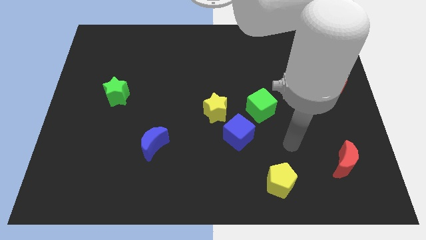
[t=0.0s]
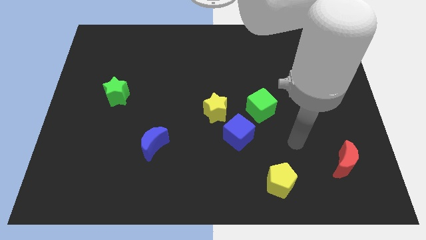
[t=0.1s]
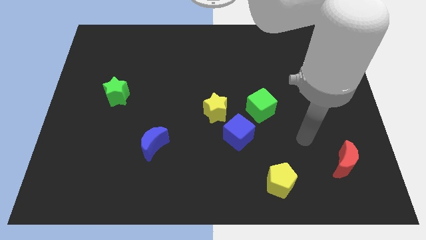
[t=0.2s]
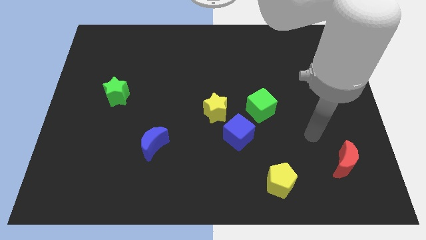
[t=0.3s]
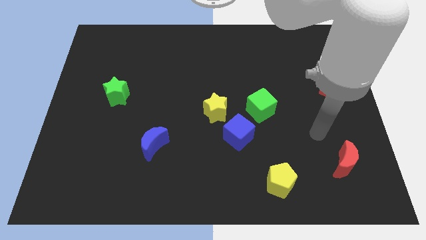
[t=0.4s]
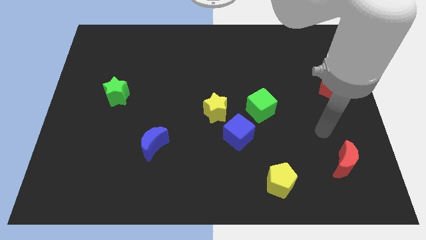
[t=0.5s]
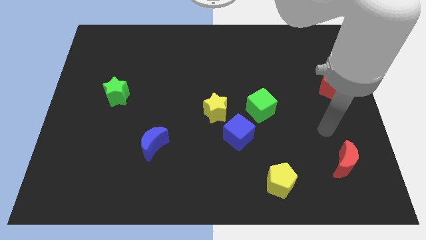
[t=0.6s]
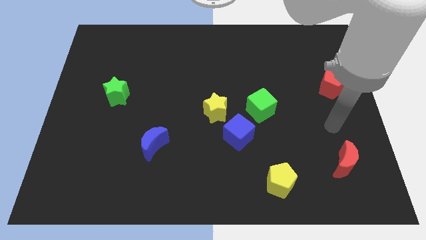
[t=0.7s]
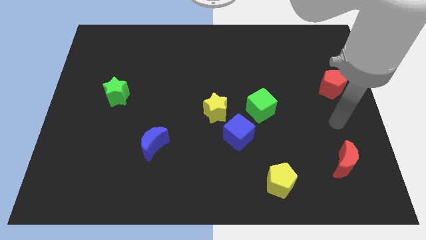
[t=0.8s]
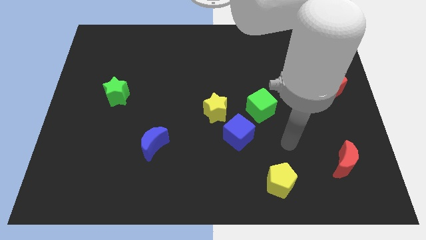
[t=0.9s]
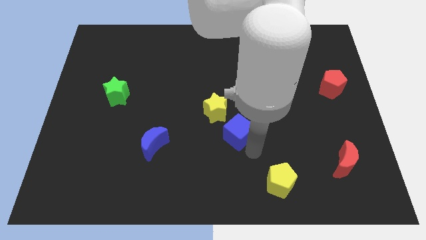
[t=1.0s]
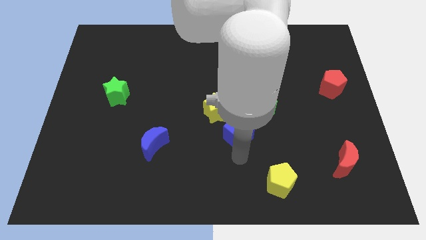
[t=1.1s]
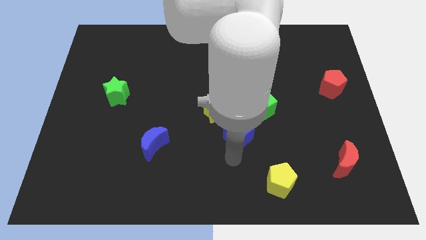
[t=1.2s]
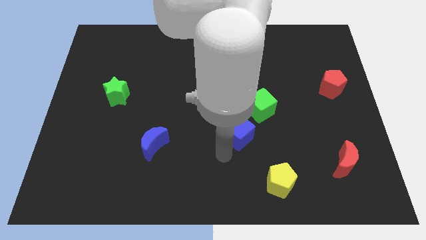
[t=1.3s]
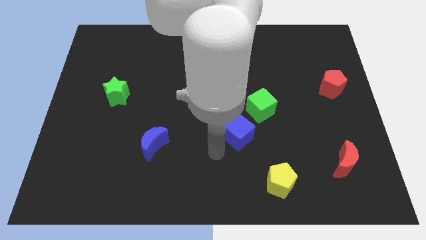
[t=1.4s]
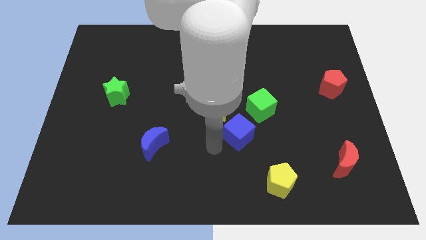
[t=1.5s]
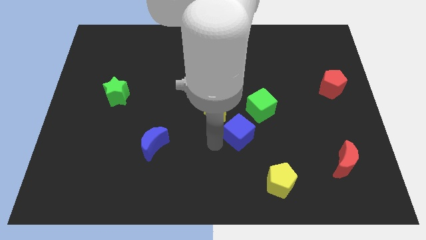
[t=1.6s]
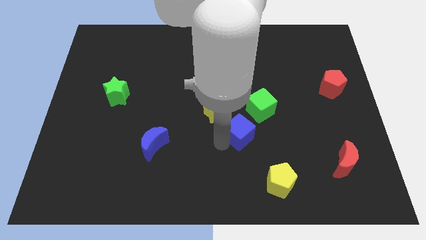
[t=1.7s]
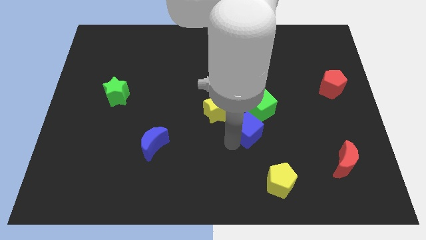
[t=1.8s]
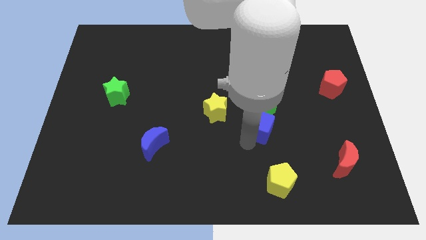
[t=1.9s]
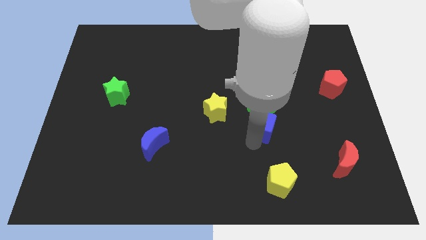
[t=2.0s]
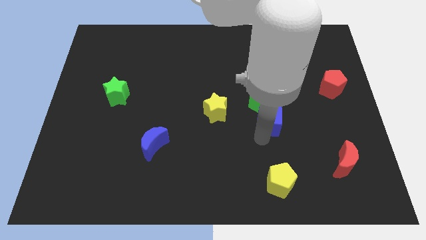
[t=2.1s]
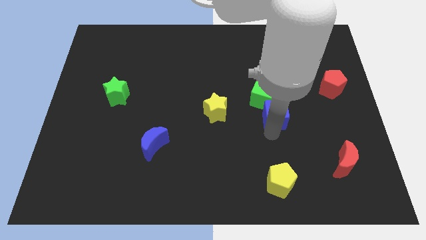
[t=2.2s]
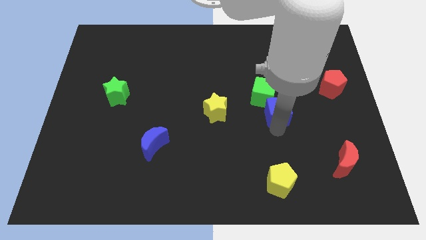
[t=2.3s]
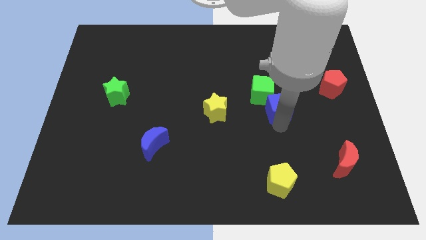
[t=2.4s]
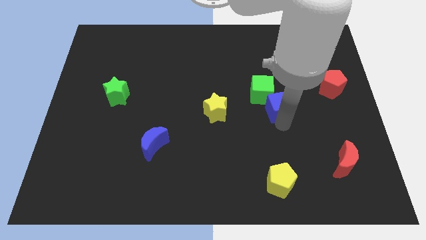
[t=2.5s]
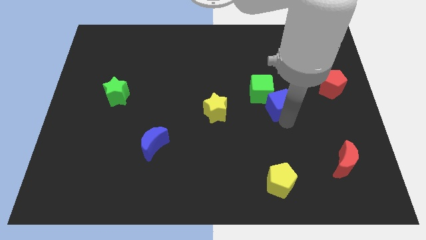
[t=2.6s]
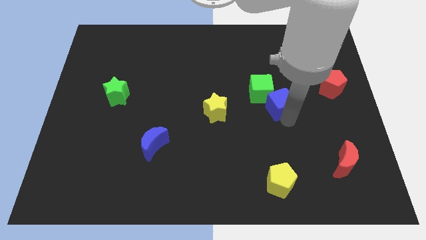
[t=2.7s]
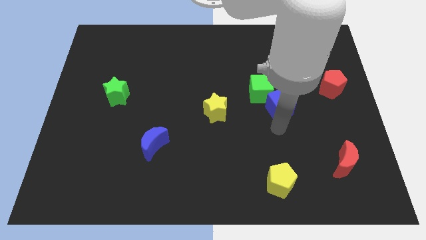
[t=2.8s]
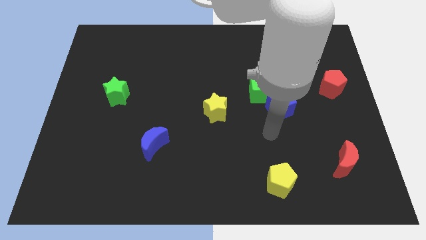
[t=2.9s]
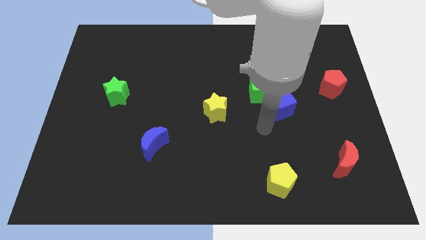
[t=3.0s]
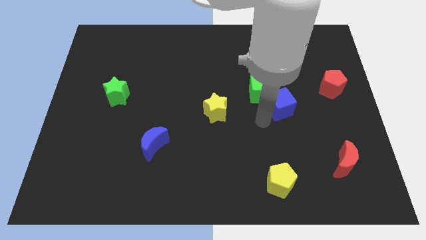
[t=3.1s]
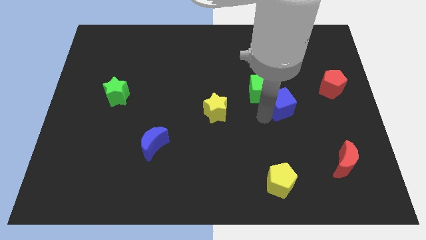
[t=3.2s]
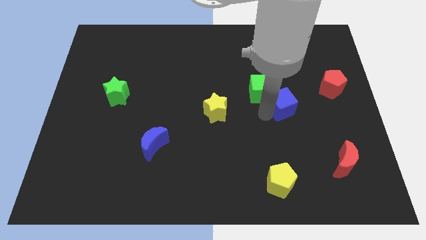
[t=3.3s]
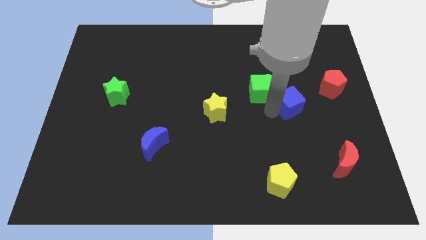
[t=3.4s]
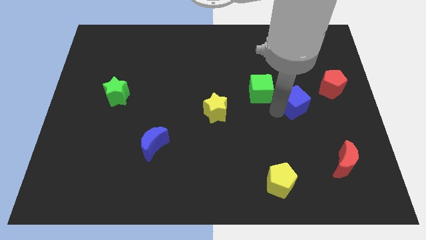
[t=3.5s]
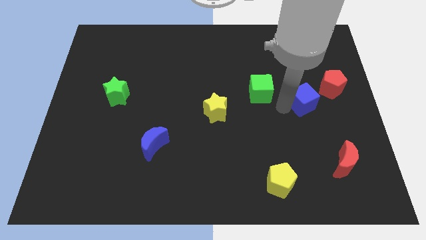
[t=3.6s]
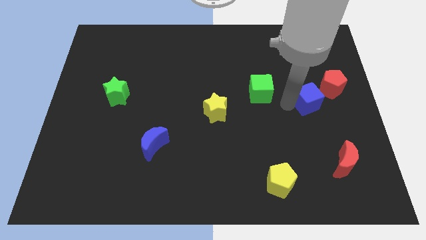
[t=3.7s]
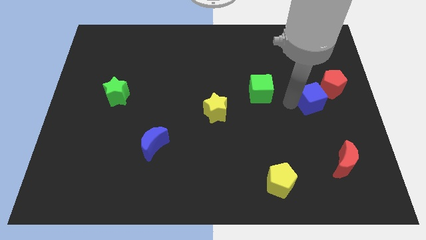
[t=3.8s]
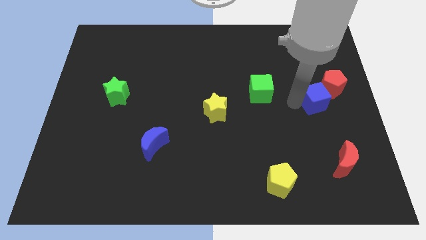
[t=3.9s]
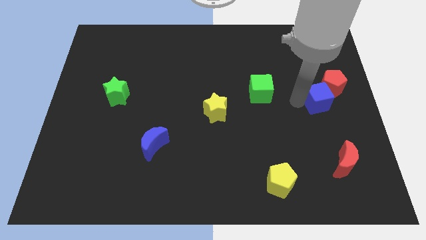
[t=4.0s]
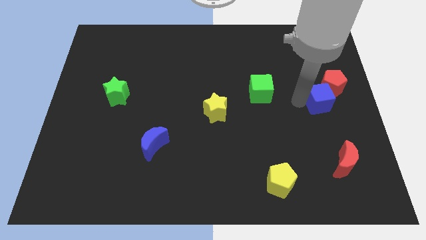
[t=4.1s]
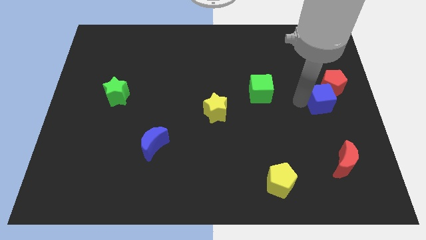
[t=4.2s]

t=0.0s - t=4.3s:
move the blue cube to the red pentagon

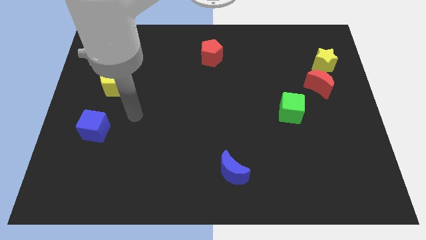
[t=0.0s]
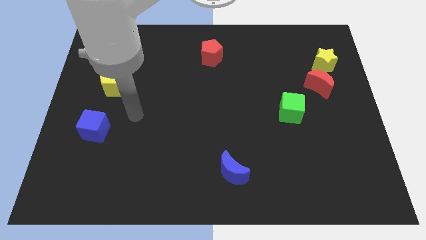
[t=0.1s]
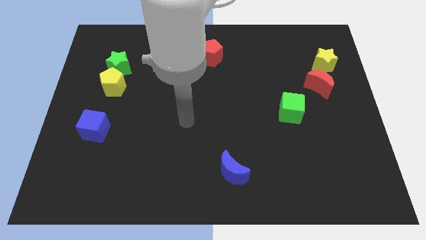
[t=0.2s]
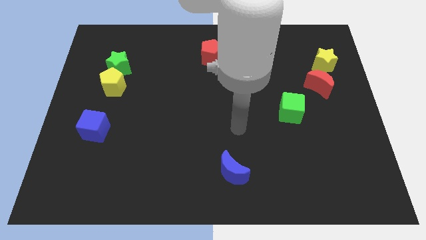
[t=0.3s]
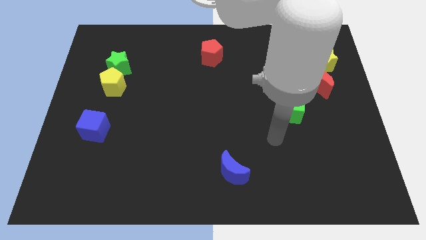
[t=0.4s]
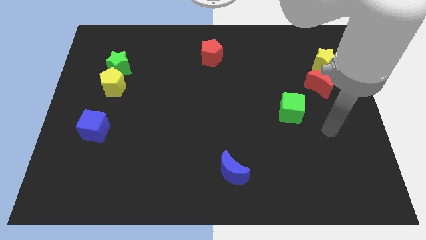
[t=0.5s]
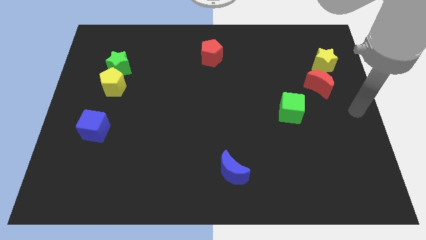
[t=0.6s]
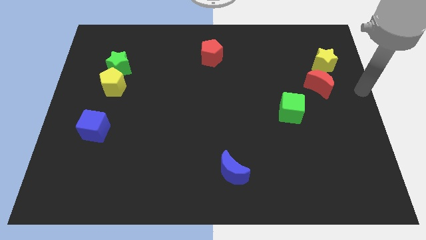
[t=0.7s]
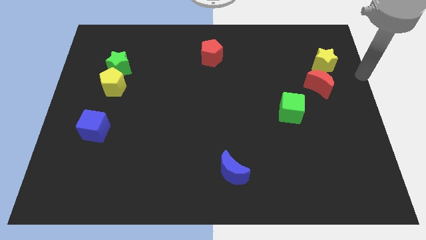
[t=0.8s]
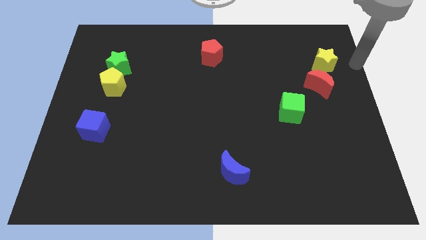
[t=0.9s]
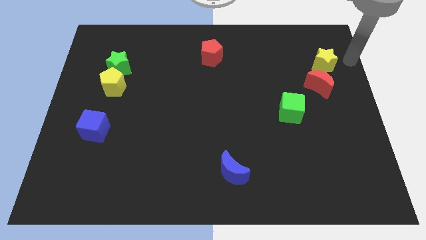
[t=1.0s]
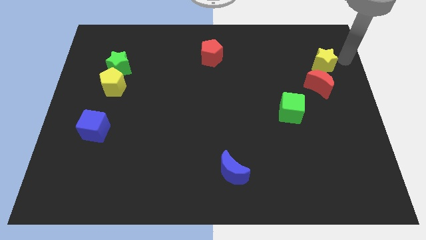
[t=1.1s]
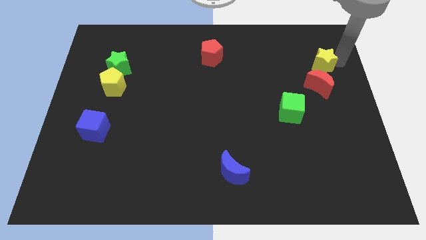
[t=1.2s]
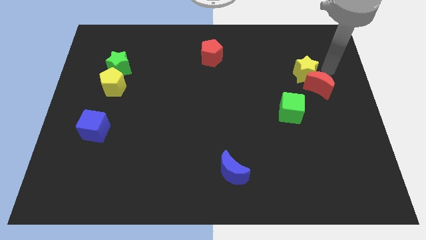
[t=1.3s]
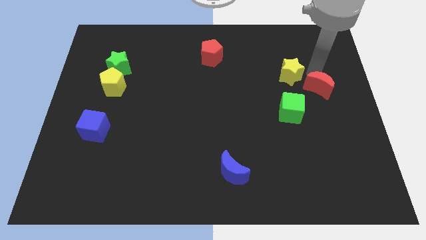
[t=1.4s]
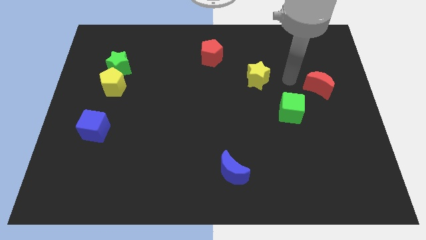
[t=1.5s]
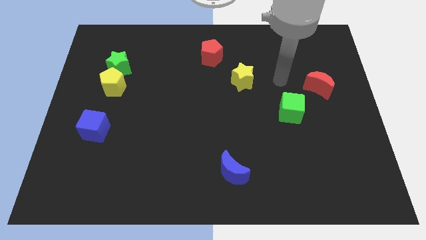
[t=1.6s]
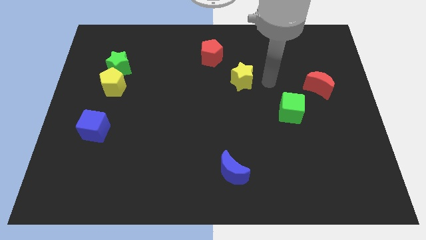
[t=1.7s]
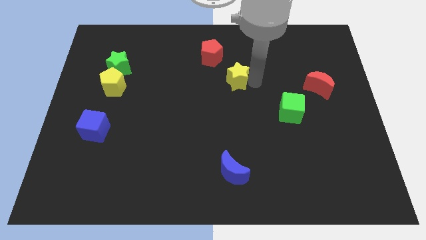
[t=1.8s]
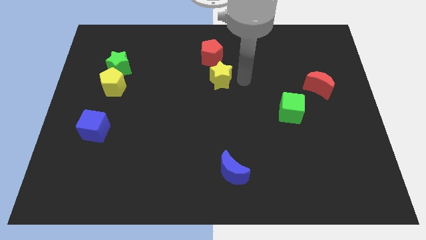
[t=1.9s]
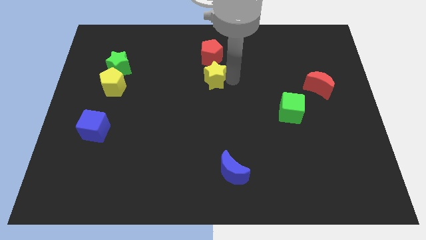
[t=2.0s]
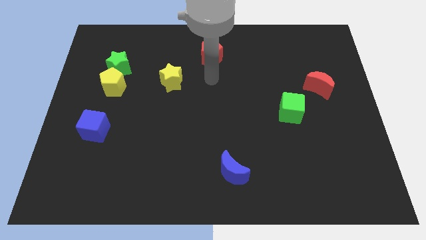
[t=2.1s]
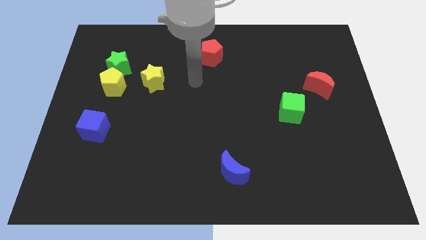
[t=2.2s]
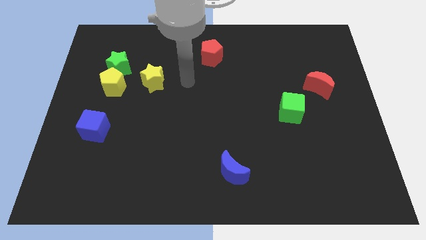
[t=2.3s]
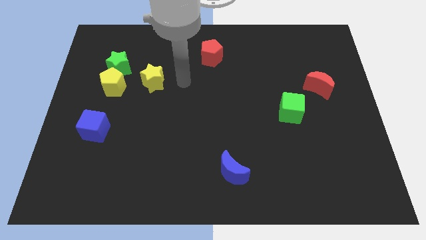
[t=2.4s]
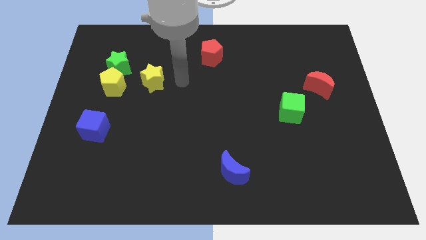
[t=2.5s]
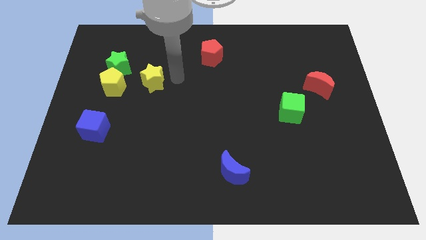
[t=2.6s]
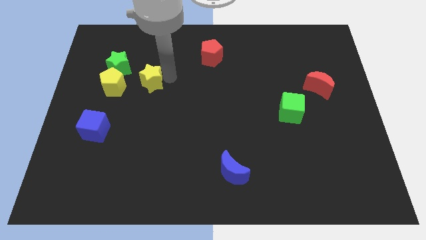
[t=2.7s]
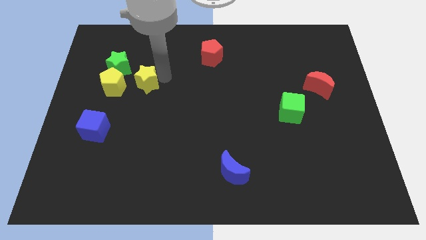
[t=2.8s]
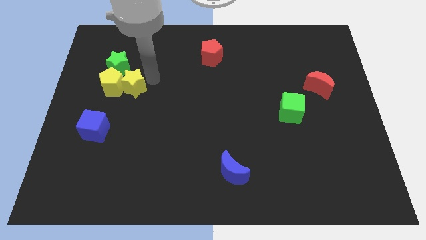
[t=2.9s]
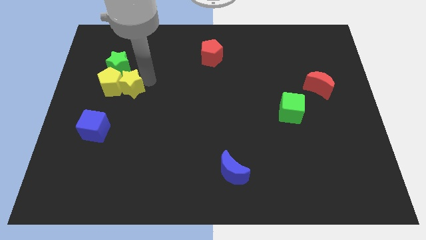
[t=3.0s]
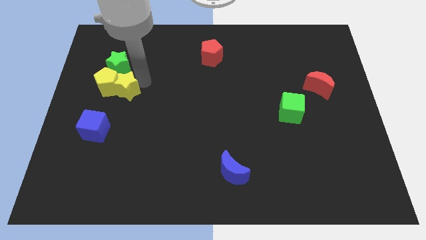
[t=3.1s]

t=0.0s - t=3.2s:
move the yellow star close to the yellow pentagon

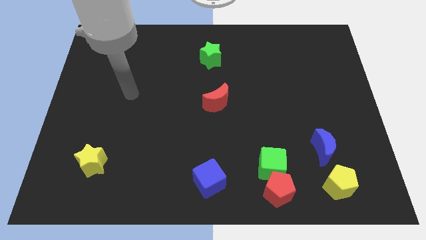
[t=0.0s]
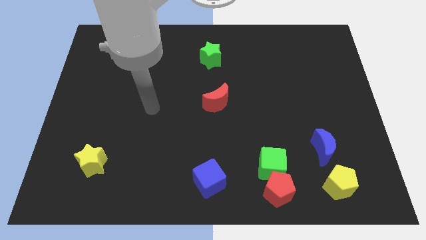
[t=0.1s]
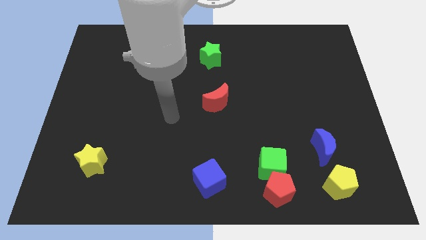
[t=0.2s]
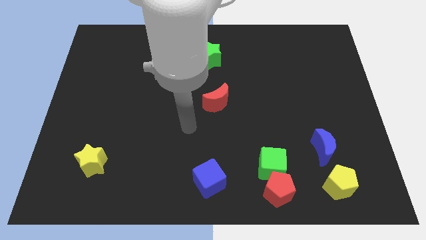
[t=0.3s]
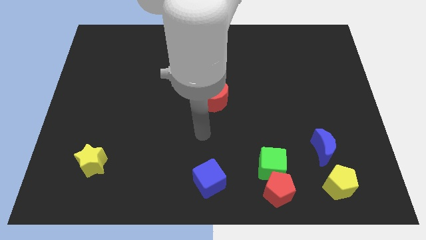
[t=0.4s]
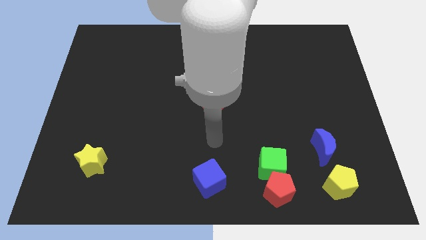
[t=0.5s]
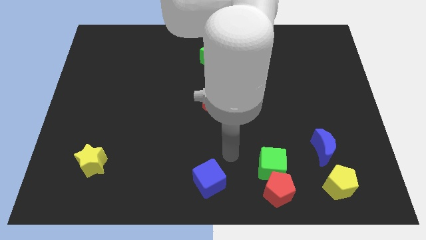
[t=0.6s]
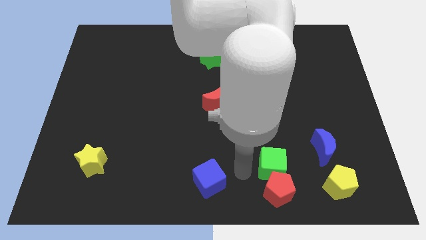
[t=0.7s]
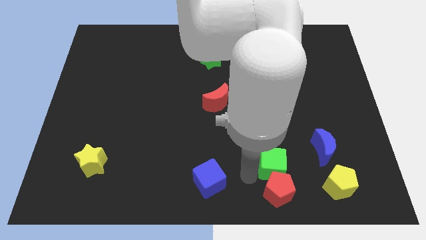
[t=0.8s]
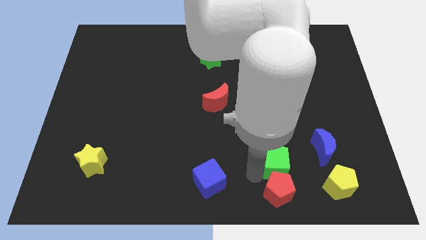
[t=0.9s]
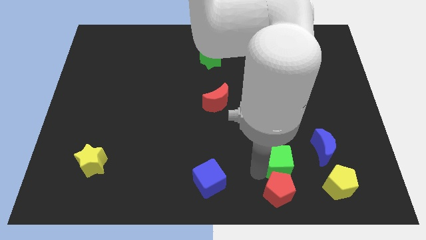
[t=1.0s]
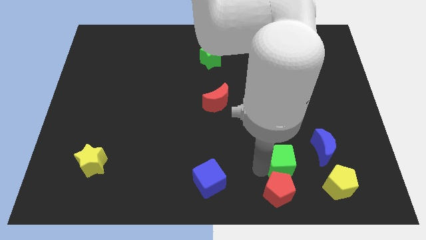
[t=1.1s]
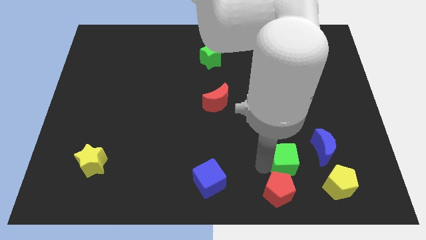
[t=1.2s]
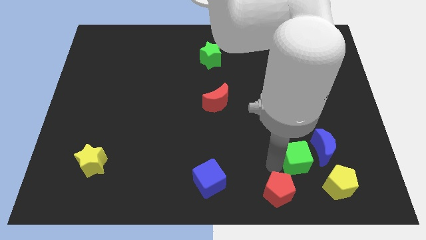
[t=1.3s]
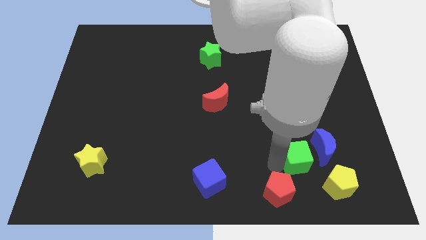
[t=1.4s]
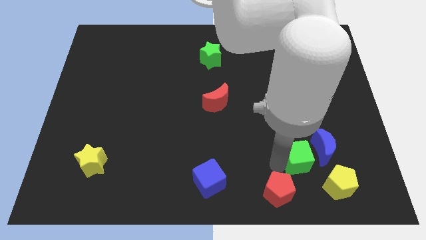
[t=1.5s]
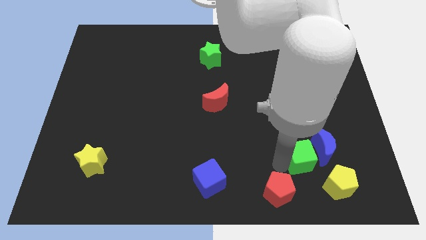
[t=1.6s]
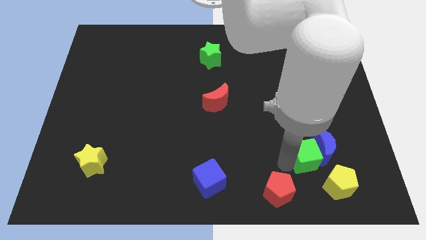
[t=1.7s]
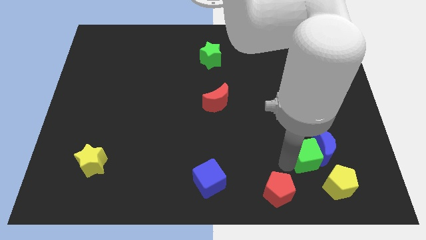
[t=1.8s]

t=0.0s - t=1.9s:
push the green cube next to the blue moon
